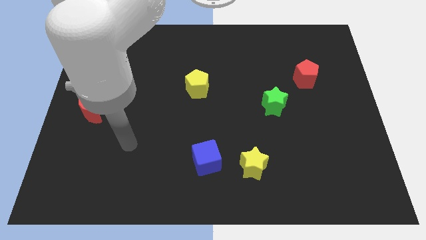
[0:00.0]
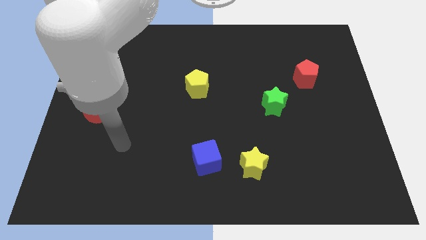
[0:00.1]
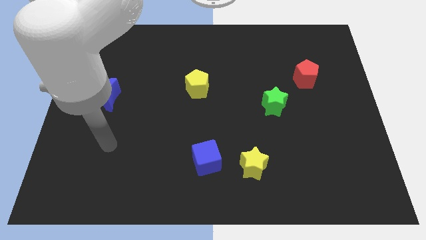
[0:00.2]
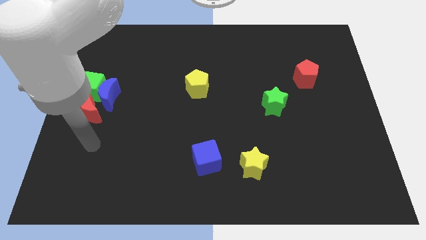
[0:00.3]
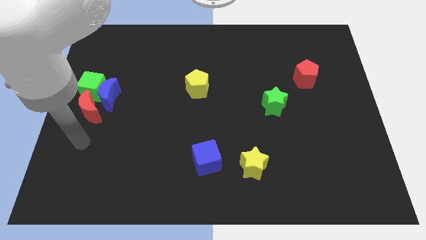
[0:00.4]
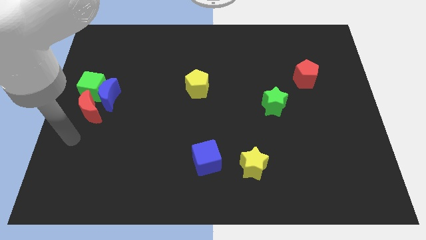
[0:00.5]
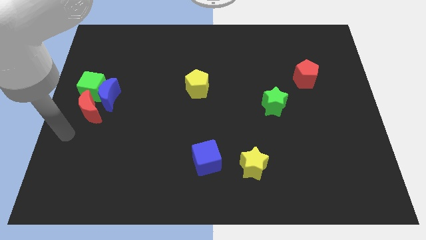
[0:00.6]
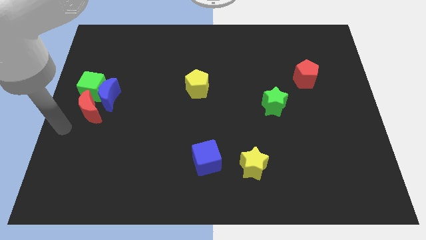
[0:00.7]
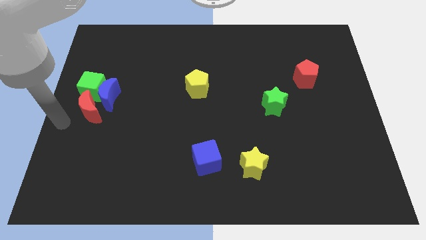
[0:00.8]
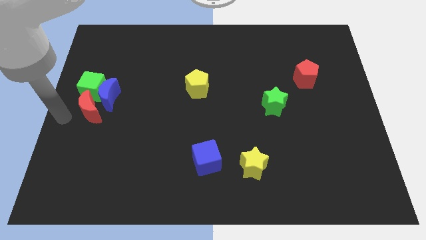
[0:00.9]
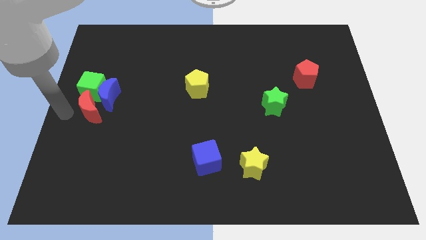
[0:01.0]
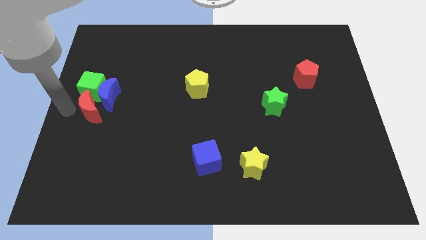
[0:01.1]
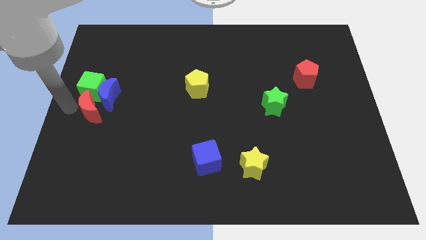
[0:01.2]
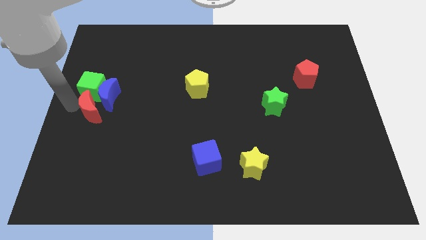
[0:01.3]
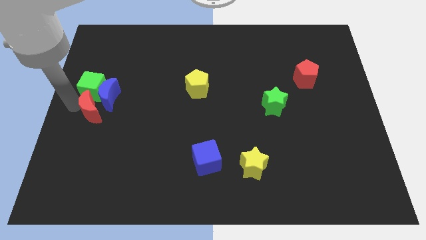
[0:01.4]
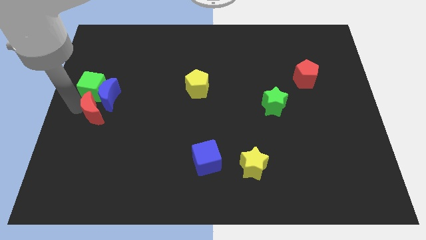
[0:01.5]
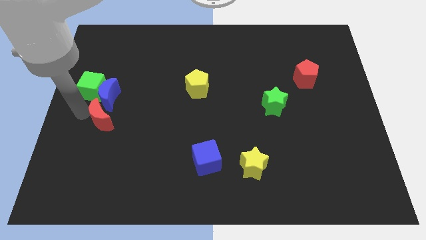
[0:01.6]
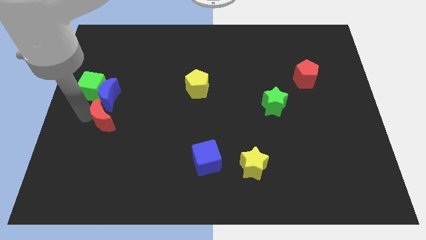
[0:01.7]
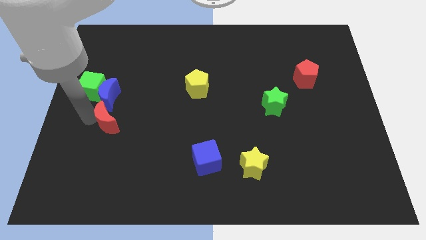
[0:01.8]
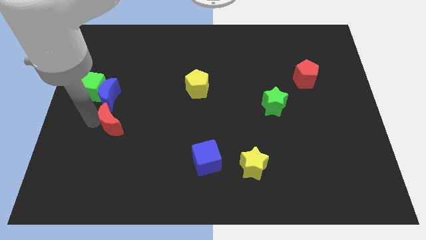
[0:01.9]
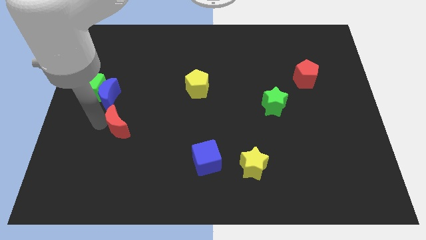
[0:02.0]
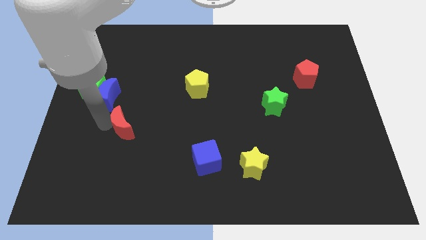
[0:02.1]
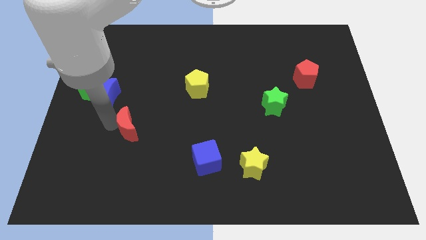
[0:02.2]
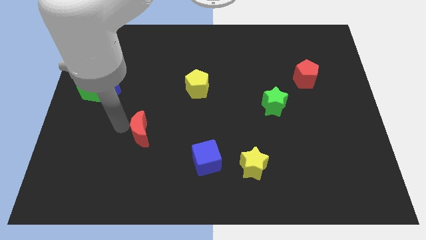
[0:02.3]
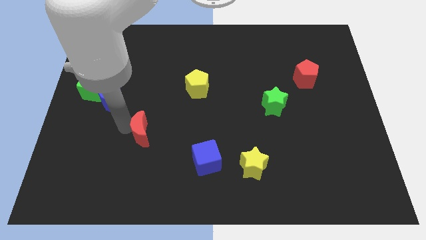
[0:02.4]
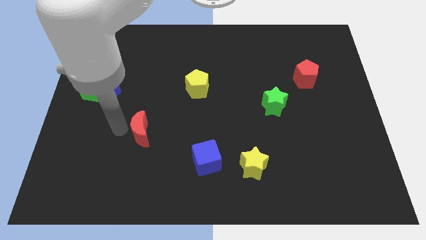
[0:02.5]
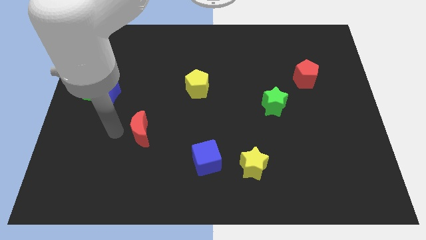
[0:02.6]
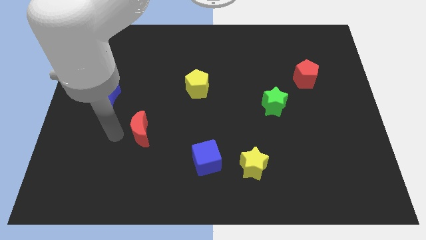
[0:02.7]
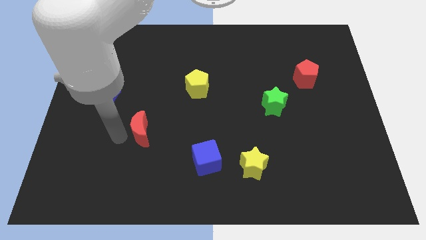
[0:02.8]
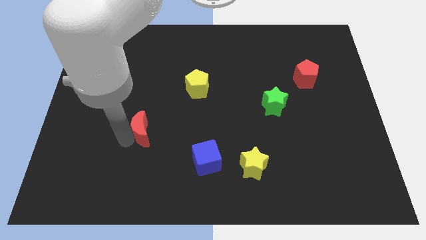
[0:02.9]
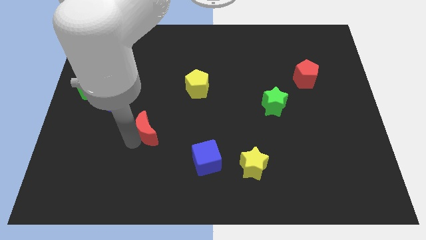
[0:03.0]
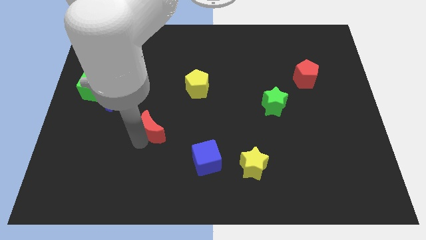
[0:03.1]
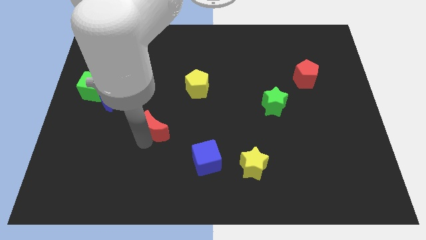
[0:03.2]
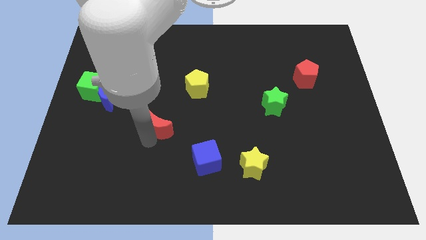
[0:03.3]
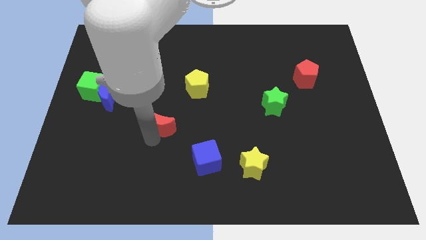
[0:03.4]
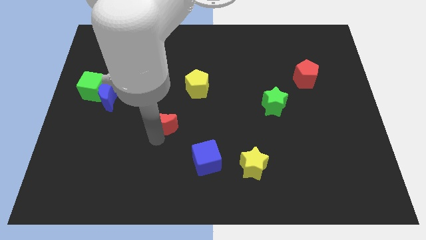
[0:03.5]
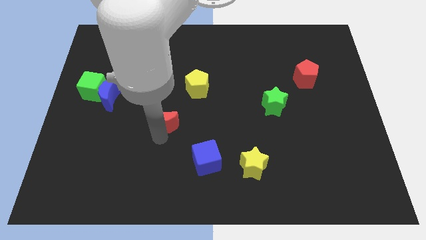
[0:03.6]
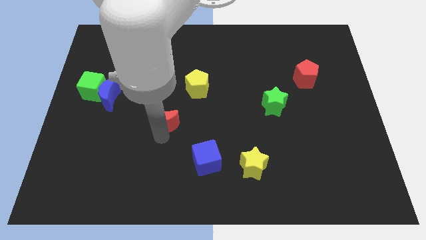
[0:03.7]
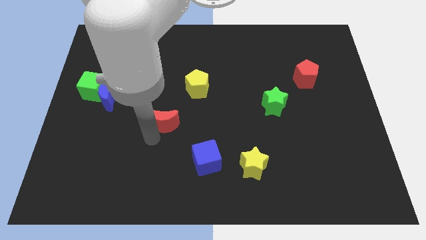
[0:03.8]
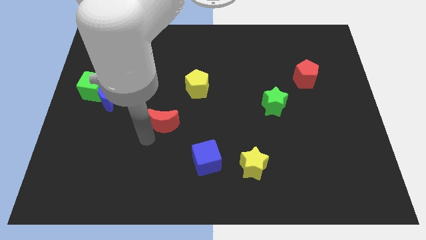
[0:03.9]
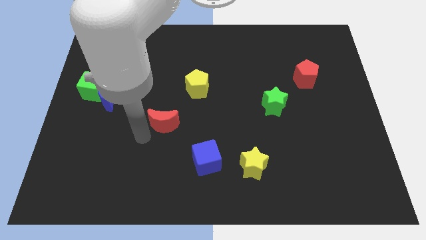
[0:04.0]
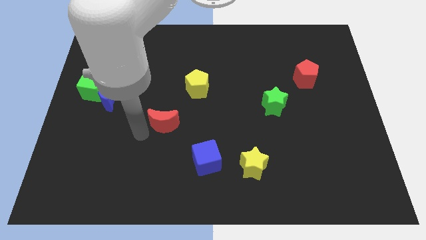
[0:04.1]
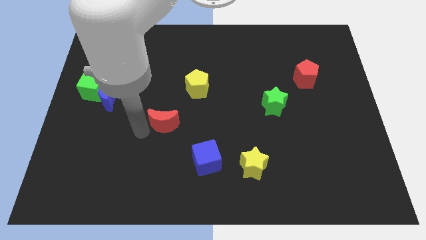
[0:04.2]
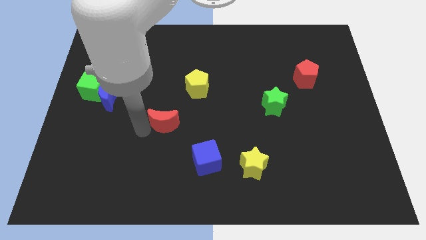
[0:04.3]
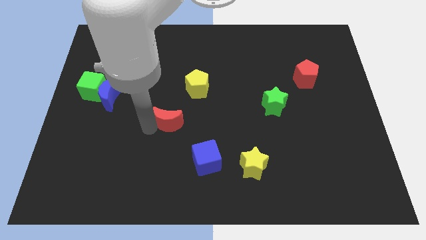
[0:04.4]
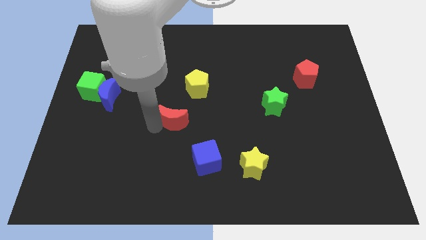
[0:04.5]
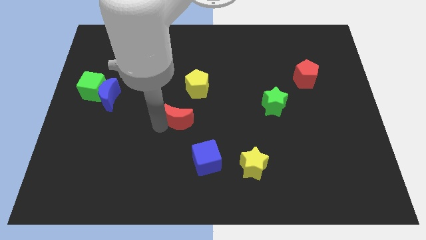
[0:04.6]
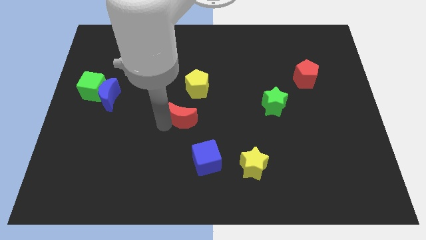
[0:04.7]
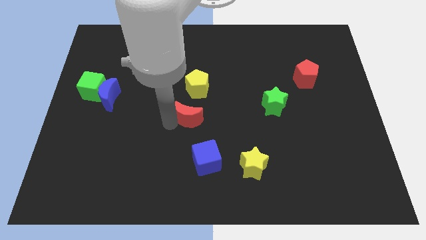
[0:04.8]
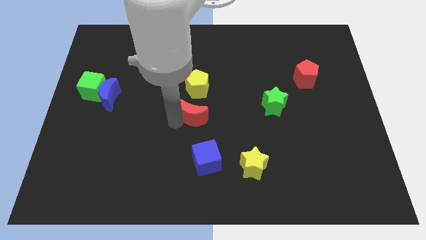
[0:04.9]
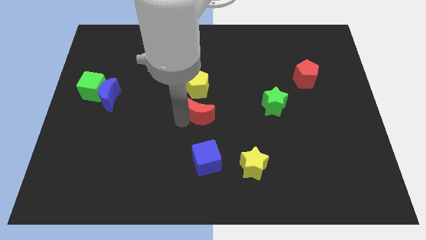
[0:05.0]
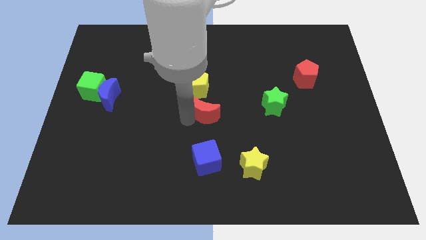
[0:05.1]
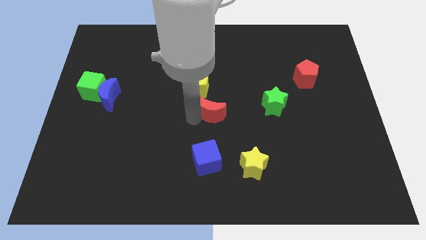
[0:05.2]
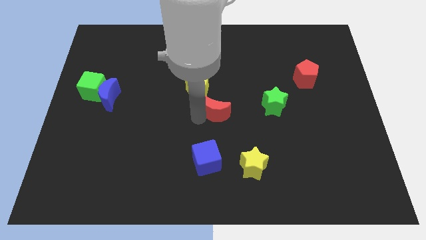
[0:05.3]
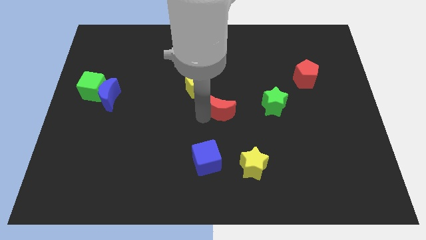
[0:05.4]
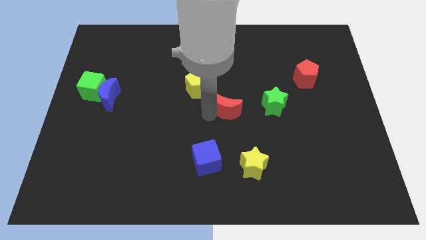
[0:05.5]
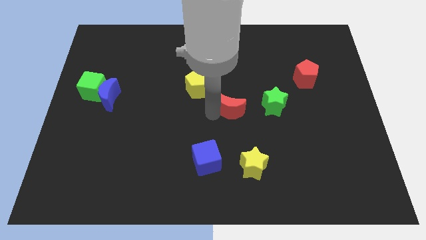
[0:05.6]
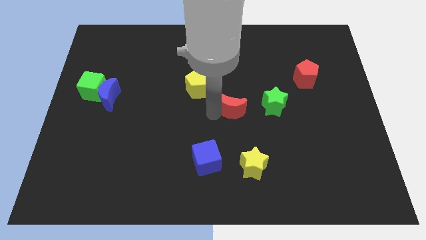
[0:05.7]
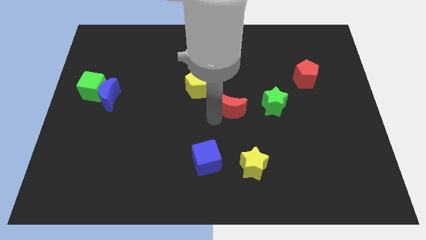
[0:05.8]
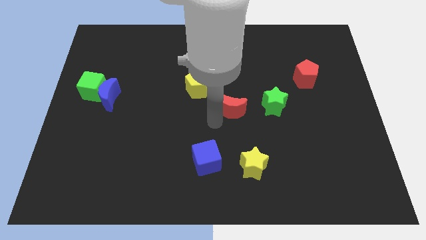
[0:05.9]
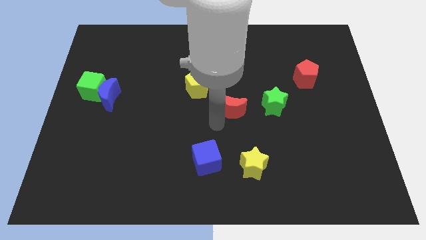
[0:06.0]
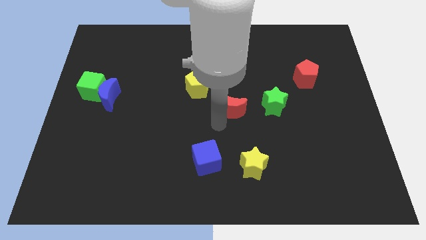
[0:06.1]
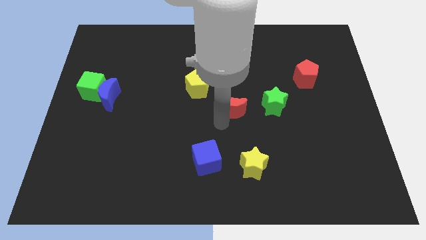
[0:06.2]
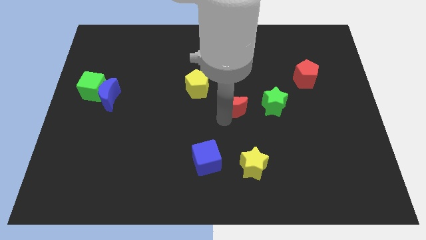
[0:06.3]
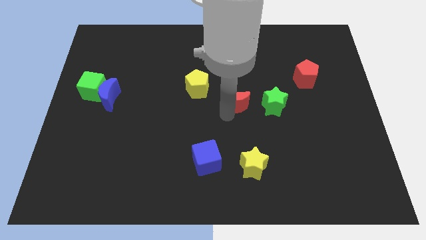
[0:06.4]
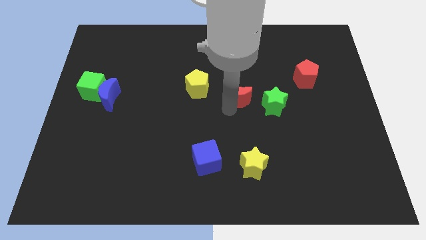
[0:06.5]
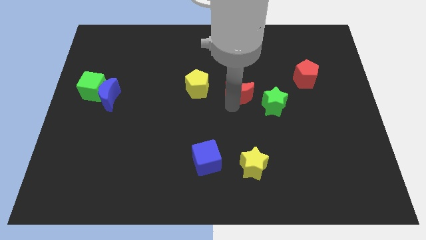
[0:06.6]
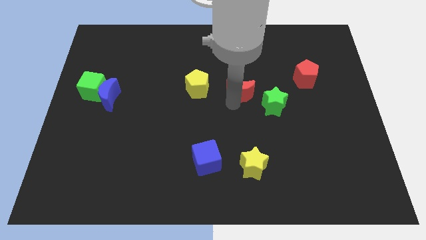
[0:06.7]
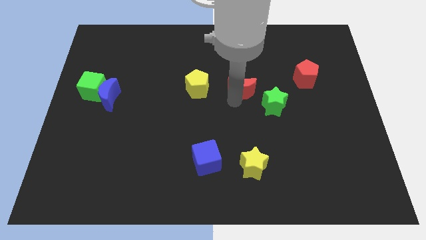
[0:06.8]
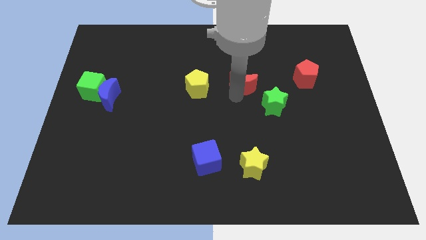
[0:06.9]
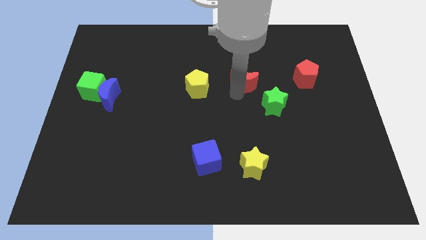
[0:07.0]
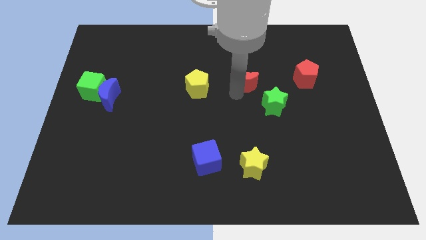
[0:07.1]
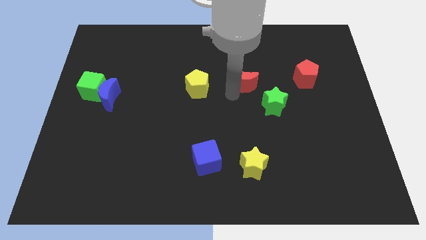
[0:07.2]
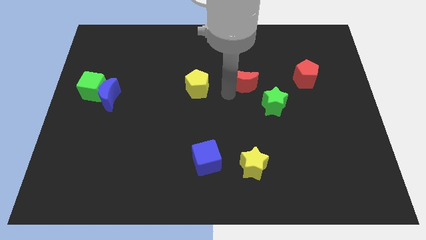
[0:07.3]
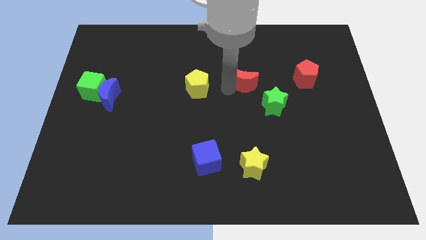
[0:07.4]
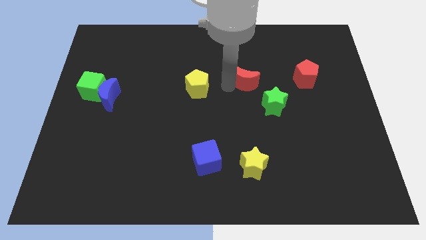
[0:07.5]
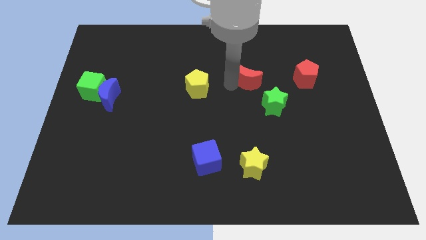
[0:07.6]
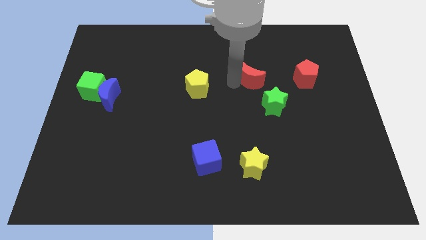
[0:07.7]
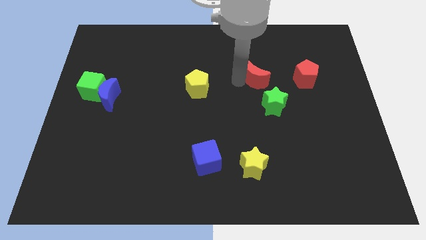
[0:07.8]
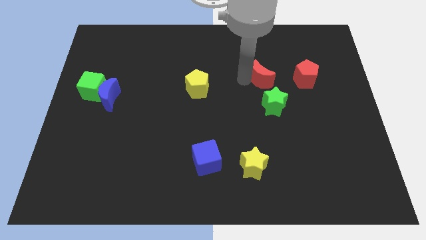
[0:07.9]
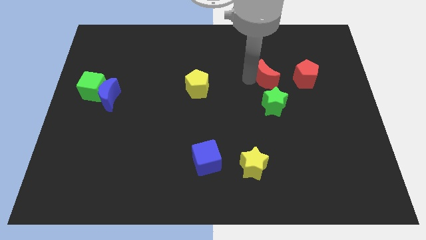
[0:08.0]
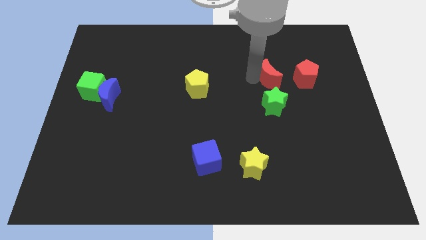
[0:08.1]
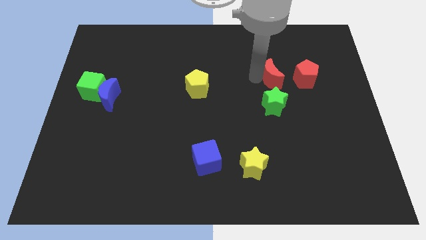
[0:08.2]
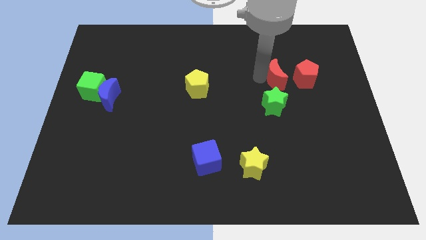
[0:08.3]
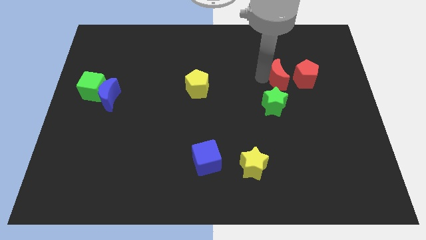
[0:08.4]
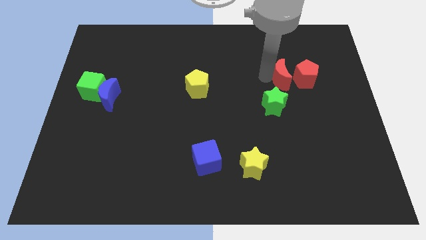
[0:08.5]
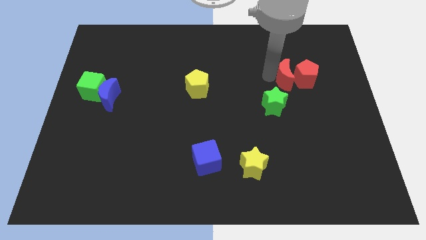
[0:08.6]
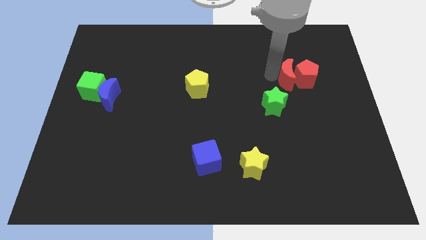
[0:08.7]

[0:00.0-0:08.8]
put the red moon close to the red pentagon
